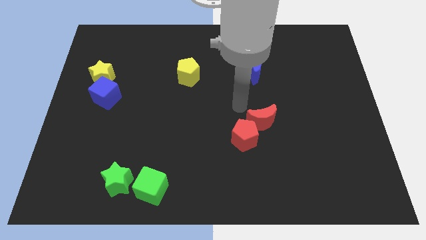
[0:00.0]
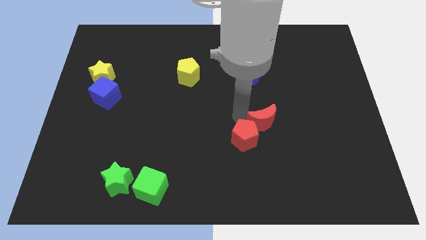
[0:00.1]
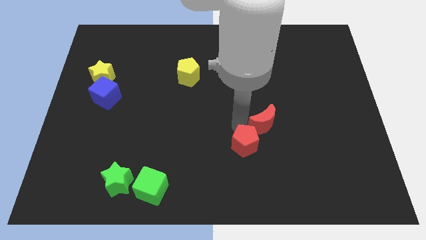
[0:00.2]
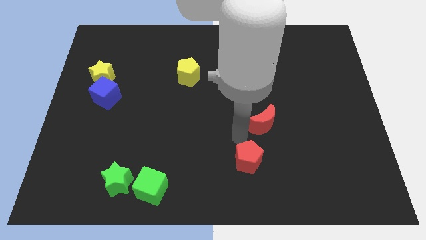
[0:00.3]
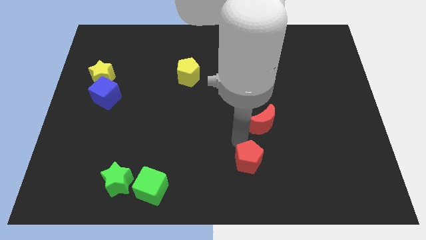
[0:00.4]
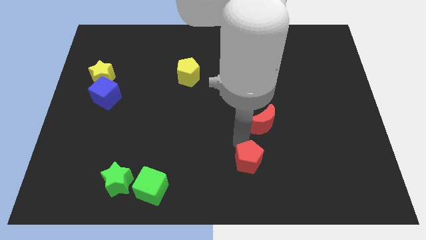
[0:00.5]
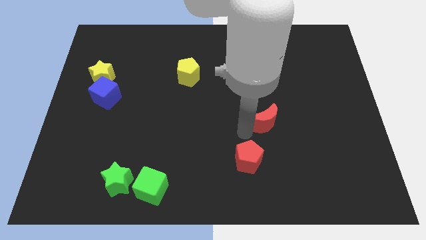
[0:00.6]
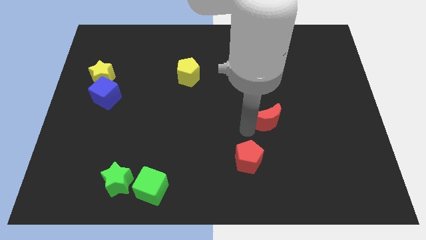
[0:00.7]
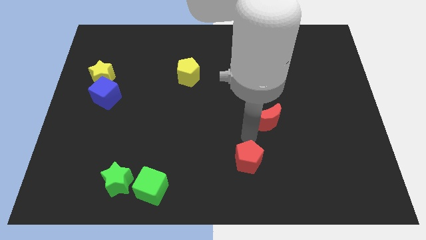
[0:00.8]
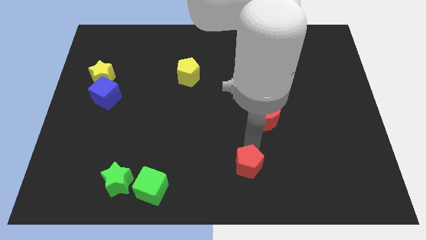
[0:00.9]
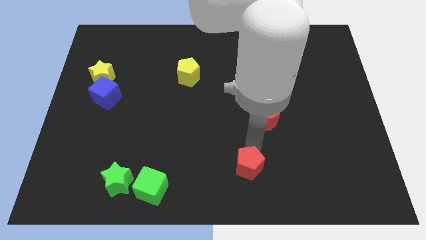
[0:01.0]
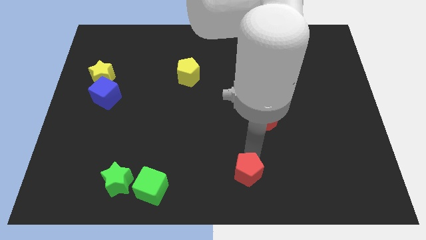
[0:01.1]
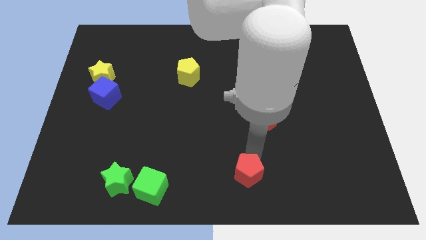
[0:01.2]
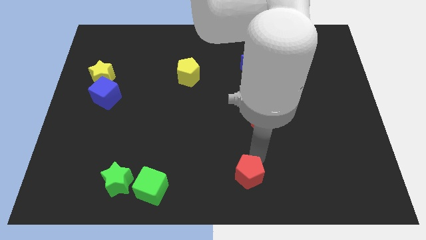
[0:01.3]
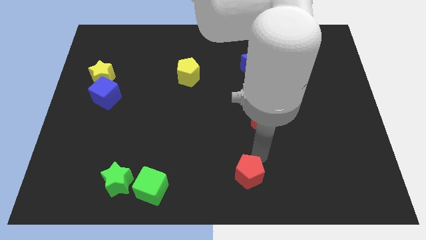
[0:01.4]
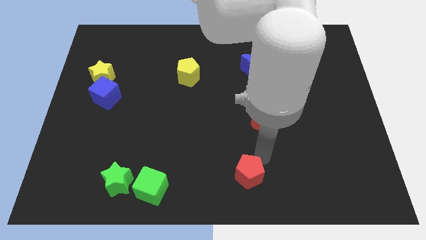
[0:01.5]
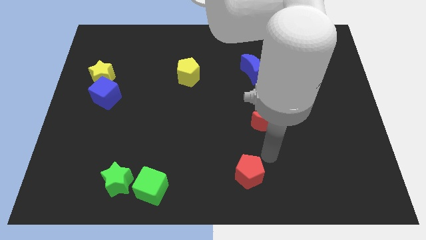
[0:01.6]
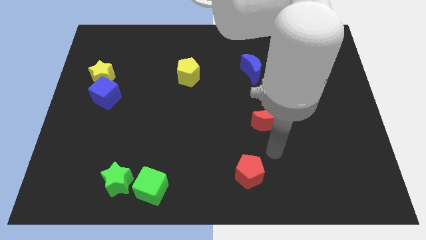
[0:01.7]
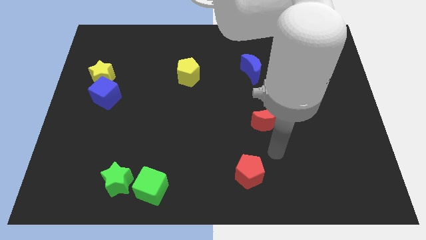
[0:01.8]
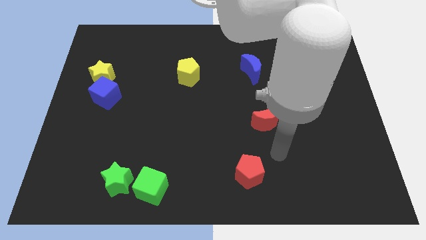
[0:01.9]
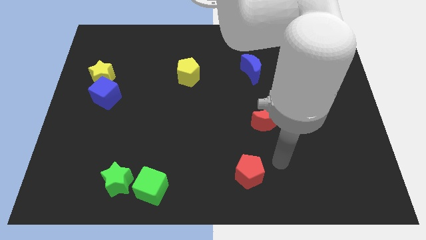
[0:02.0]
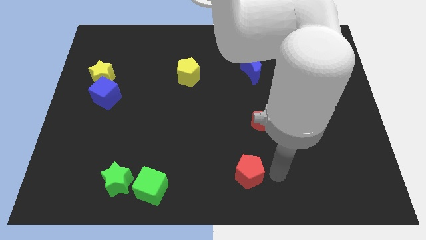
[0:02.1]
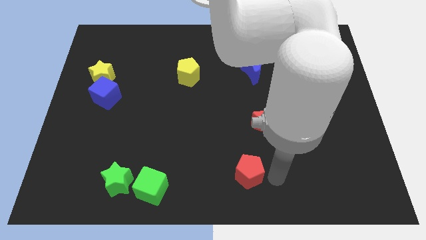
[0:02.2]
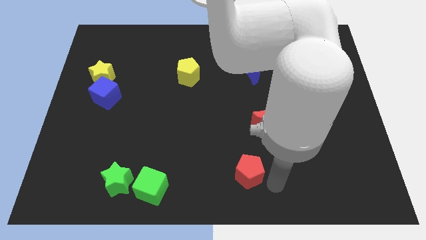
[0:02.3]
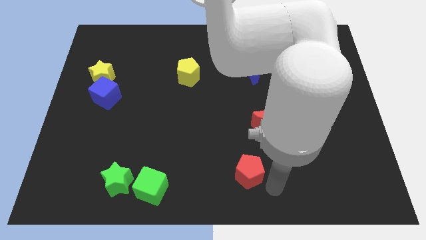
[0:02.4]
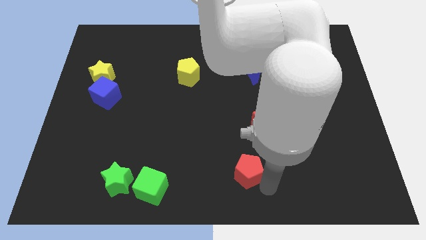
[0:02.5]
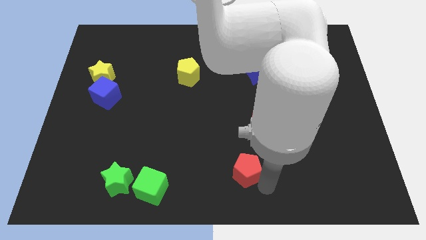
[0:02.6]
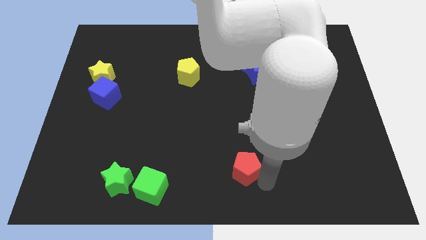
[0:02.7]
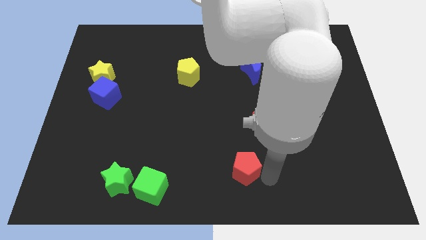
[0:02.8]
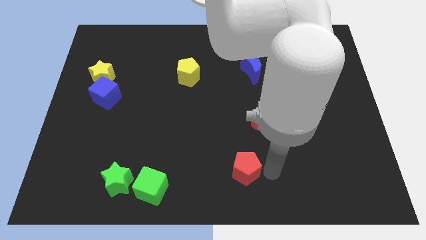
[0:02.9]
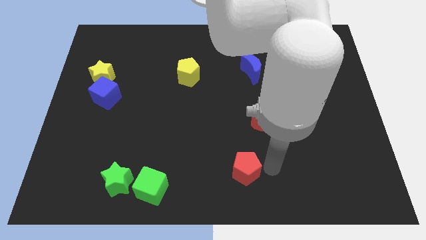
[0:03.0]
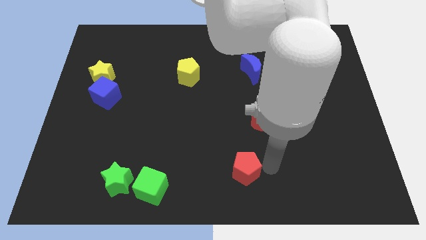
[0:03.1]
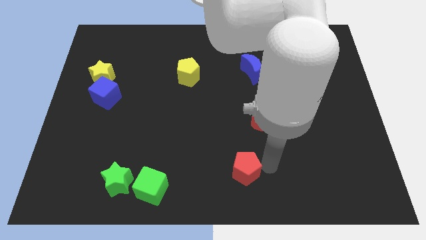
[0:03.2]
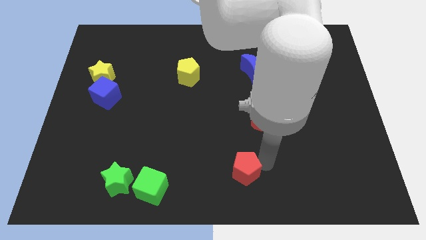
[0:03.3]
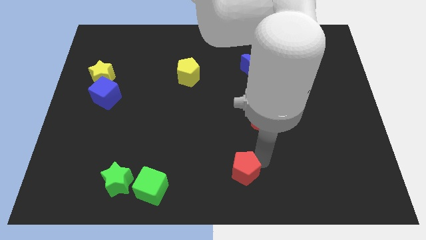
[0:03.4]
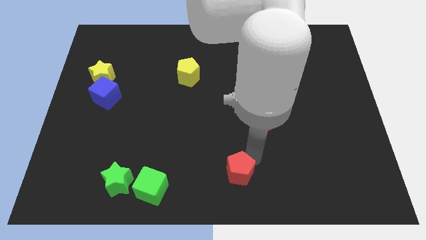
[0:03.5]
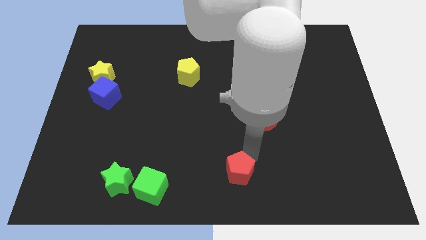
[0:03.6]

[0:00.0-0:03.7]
move the red pentagon to the bottom of the board

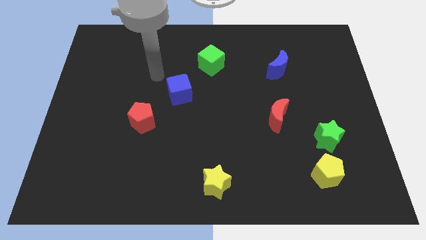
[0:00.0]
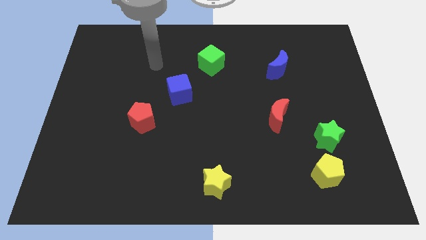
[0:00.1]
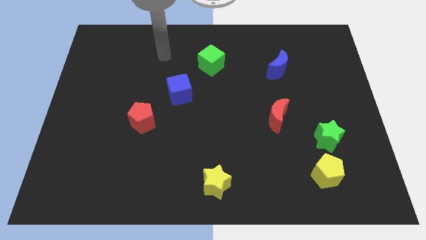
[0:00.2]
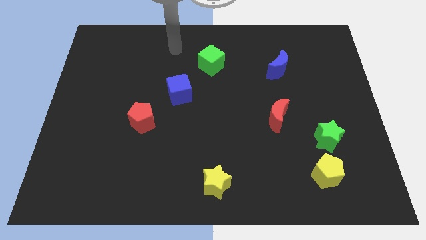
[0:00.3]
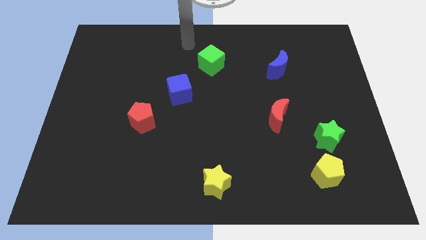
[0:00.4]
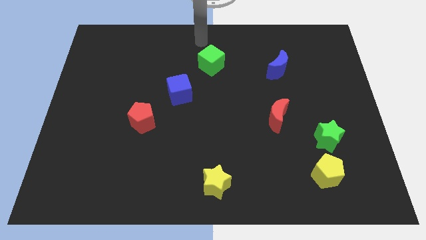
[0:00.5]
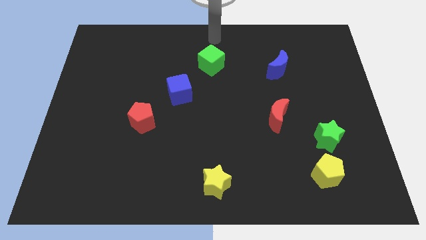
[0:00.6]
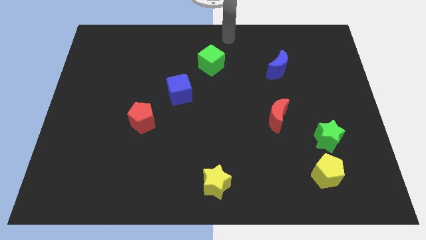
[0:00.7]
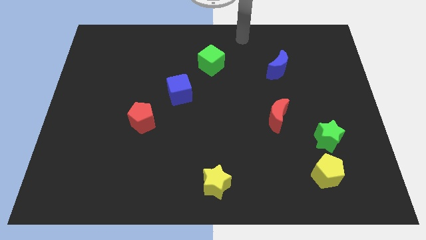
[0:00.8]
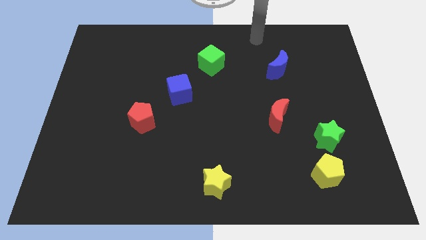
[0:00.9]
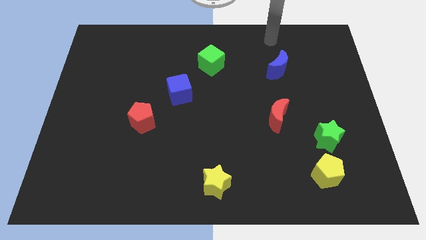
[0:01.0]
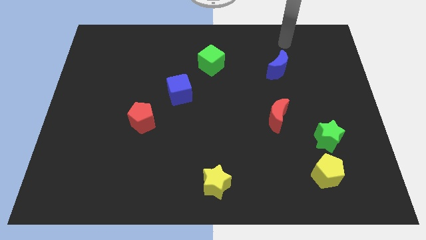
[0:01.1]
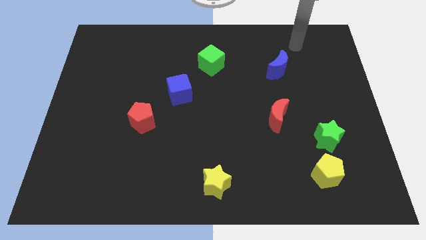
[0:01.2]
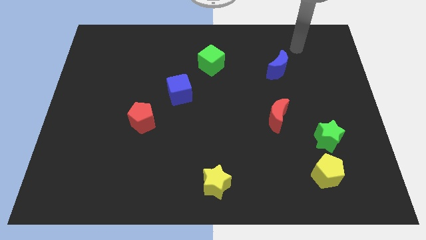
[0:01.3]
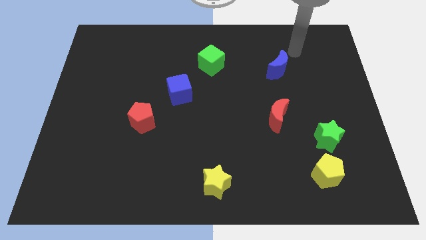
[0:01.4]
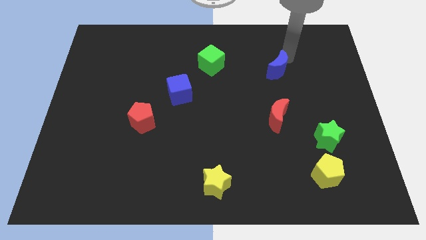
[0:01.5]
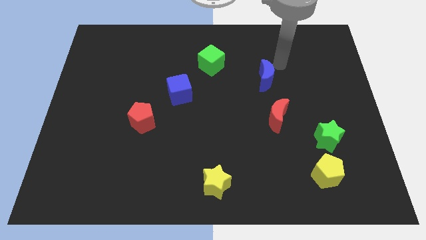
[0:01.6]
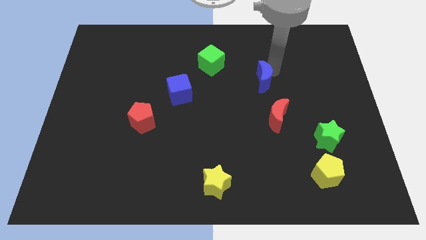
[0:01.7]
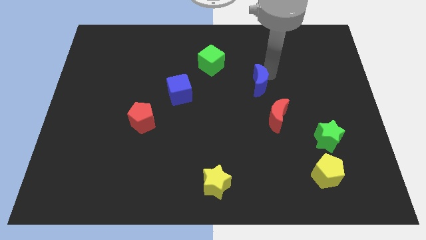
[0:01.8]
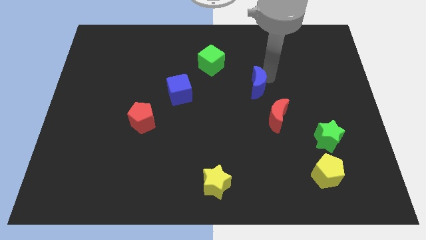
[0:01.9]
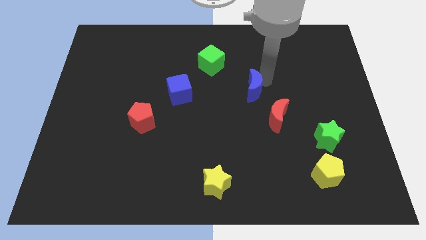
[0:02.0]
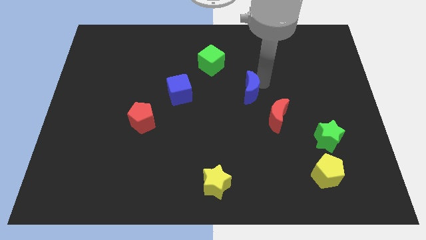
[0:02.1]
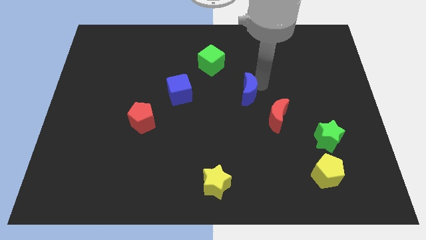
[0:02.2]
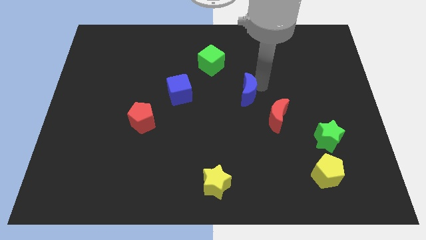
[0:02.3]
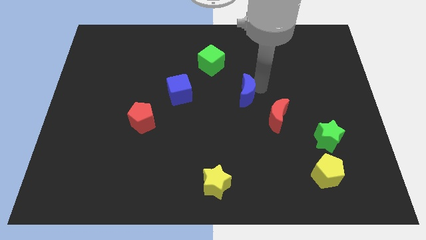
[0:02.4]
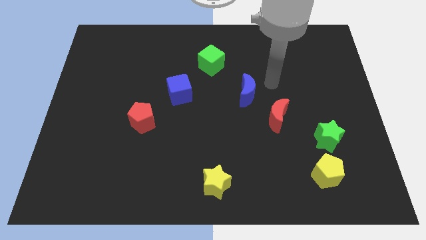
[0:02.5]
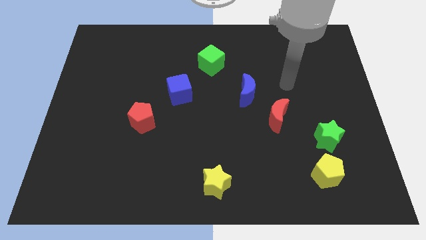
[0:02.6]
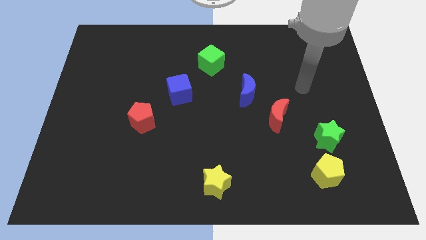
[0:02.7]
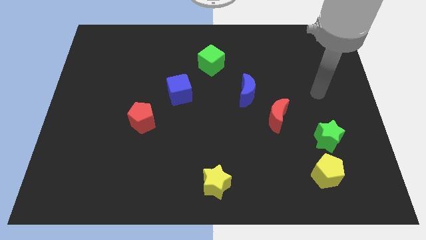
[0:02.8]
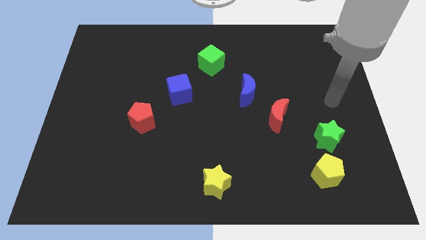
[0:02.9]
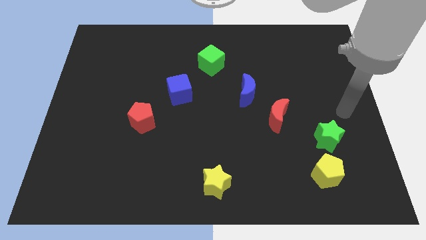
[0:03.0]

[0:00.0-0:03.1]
place the blue crescent to the right of the blue cube

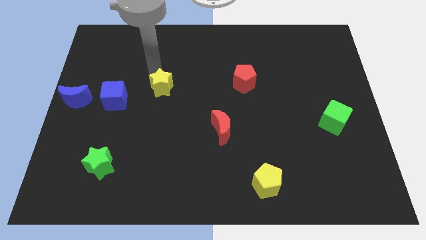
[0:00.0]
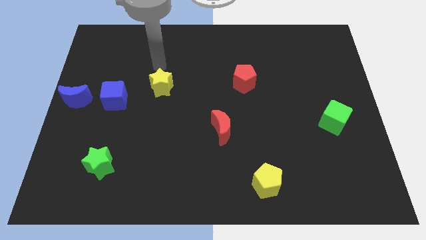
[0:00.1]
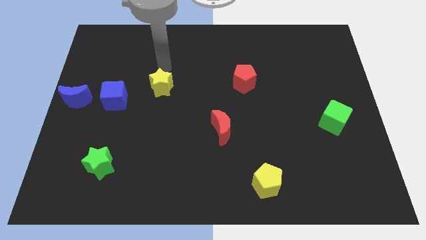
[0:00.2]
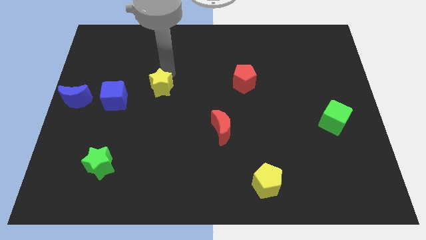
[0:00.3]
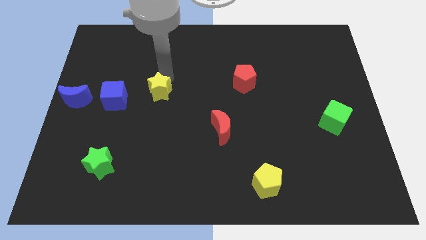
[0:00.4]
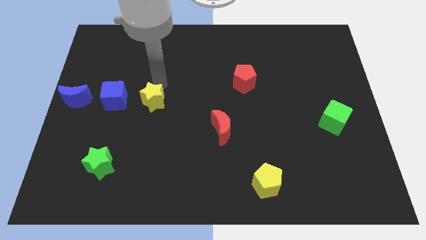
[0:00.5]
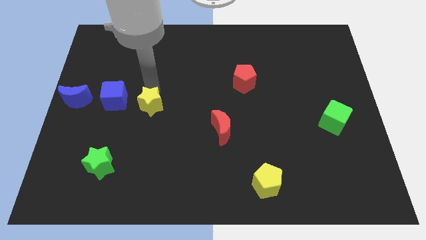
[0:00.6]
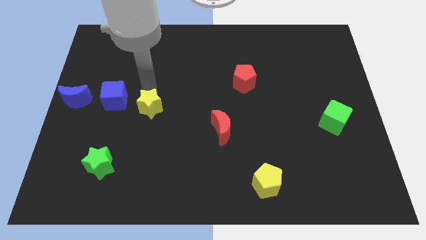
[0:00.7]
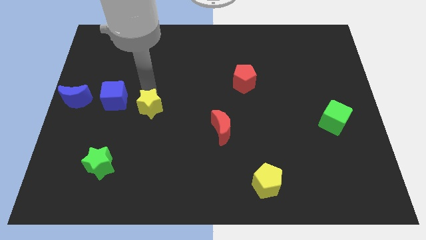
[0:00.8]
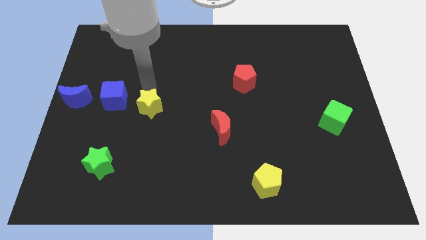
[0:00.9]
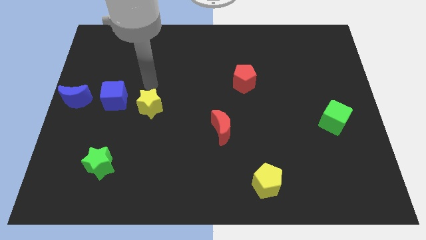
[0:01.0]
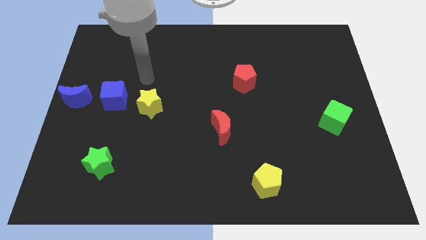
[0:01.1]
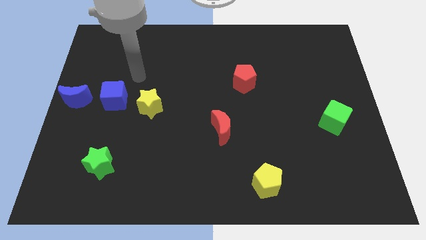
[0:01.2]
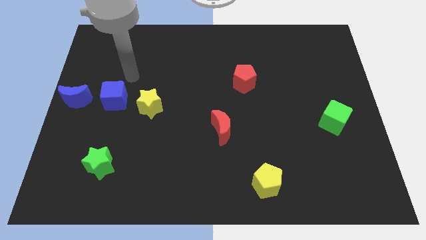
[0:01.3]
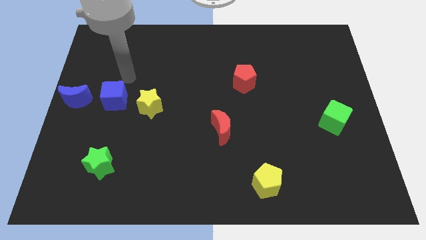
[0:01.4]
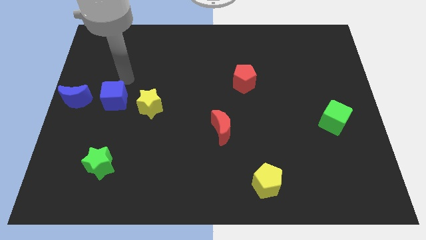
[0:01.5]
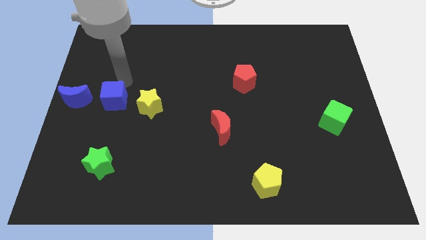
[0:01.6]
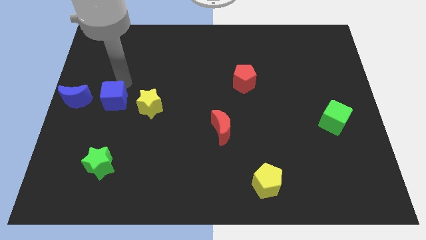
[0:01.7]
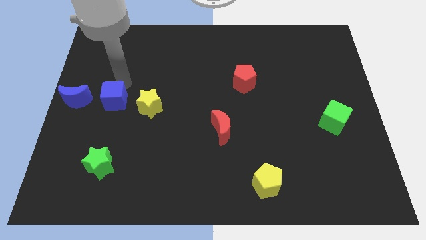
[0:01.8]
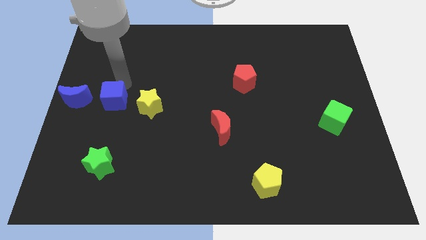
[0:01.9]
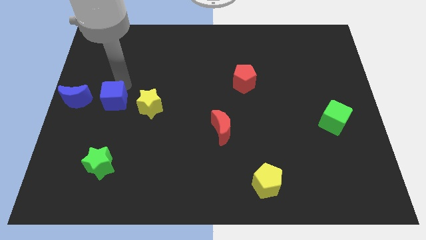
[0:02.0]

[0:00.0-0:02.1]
place the yellow star on the right of the blue cube
